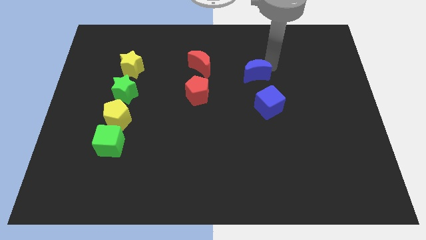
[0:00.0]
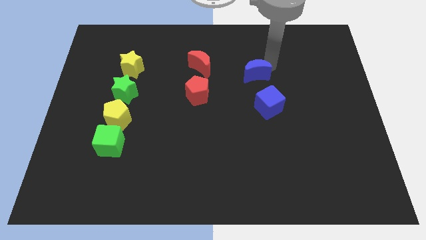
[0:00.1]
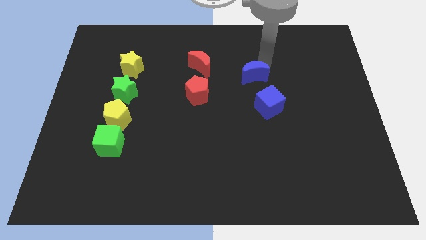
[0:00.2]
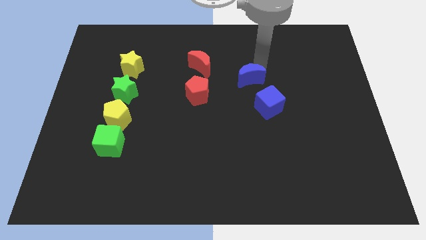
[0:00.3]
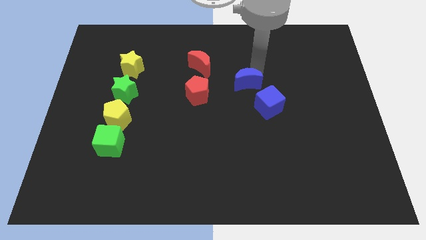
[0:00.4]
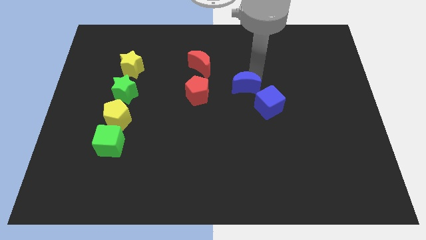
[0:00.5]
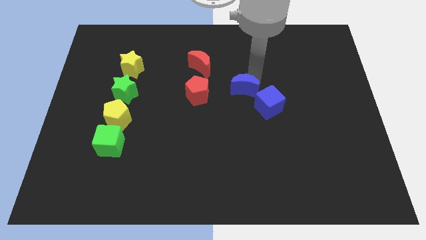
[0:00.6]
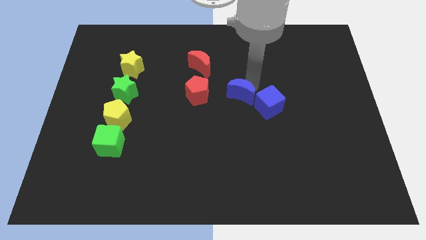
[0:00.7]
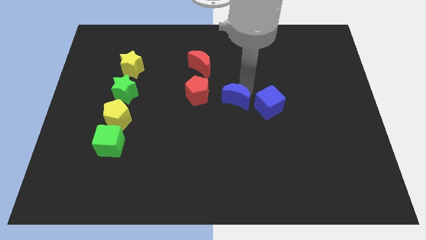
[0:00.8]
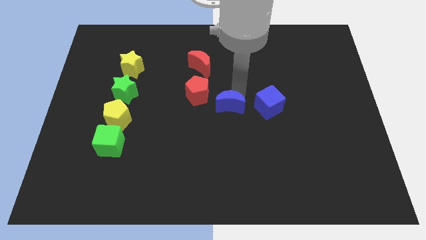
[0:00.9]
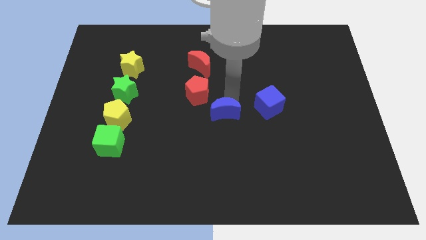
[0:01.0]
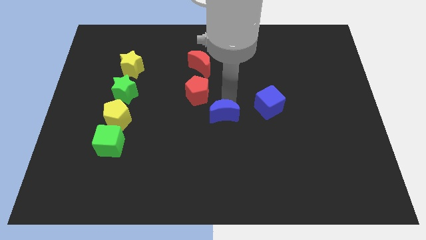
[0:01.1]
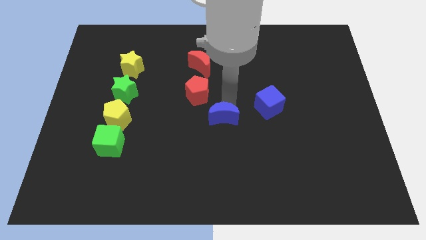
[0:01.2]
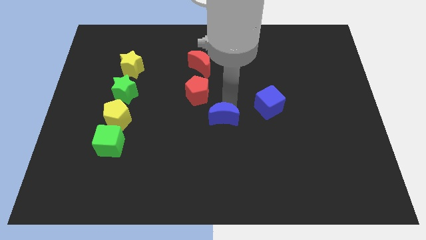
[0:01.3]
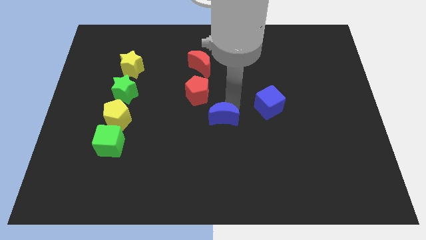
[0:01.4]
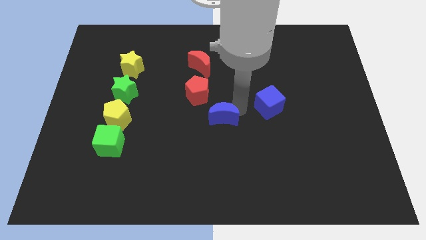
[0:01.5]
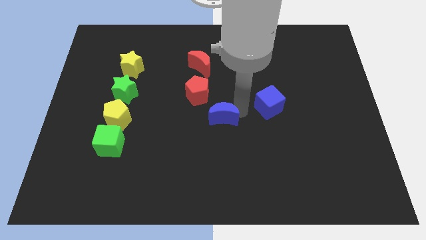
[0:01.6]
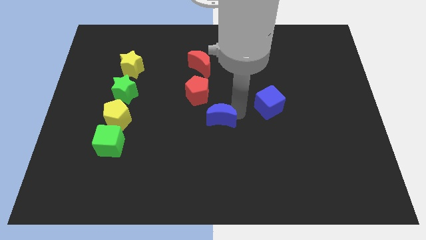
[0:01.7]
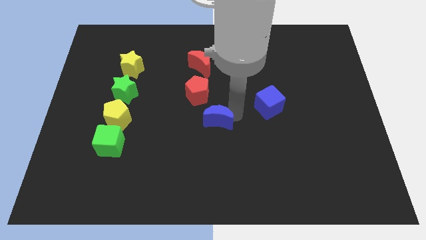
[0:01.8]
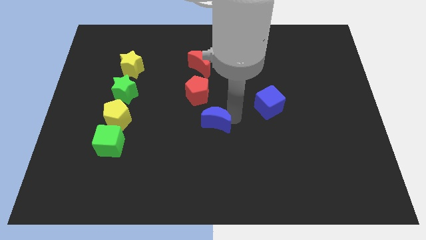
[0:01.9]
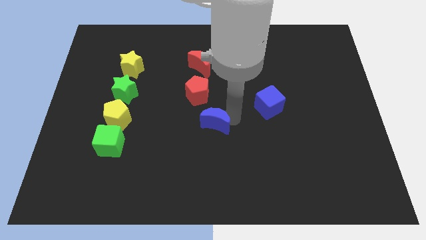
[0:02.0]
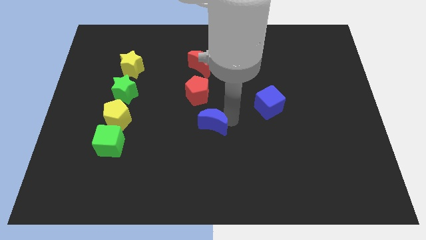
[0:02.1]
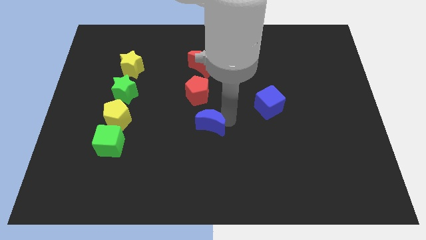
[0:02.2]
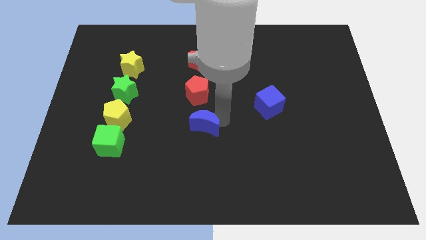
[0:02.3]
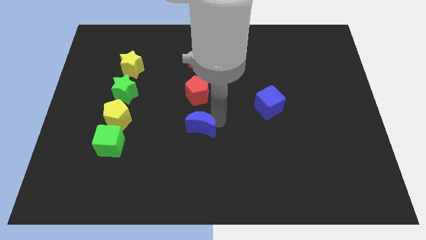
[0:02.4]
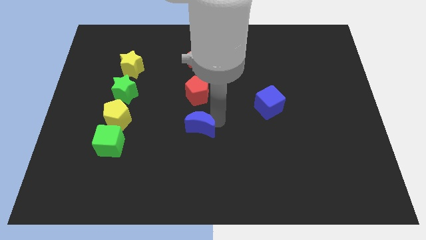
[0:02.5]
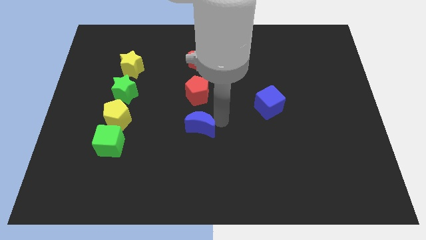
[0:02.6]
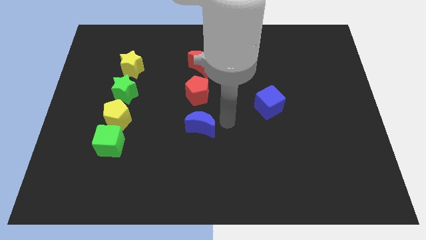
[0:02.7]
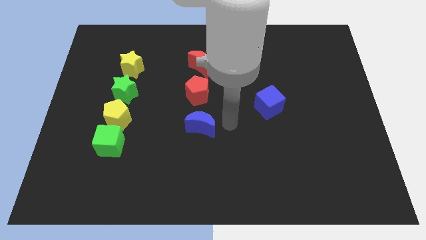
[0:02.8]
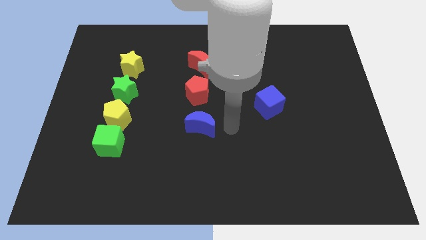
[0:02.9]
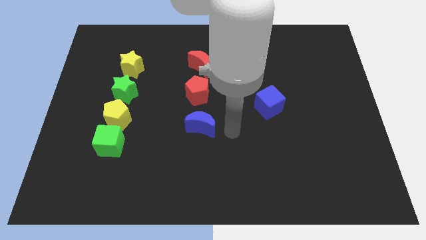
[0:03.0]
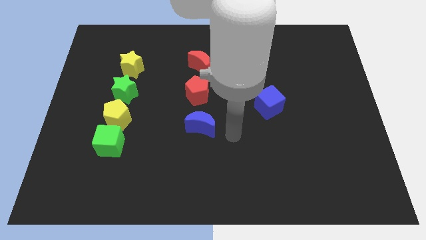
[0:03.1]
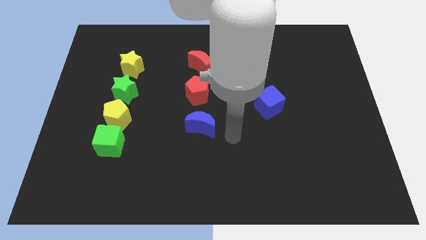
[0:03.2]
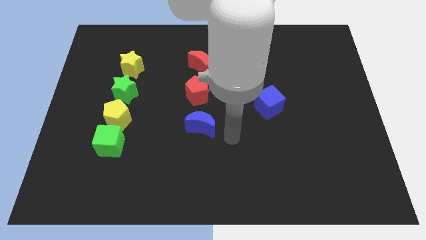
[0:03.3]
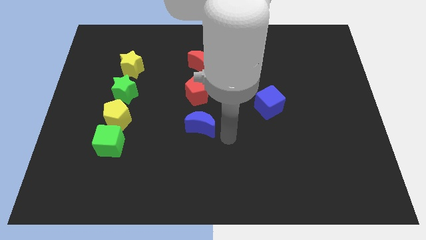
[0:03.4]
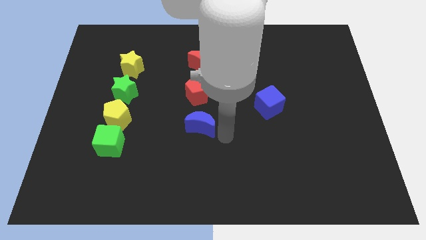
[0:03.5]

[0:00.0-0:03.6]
put the blue crescent vertically below the red pentagon

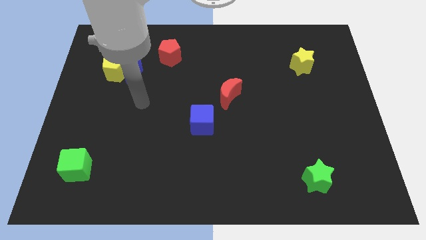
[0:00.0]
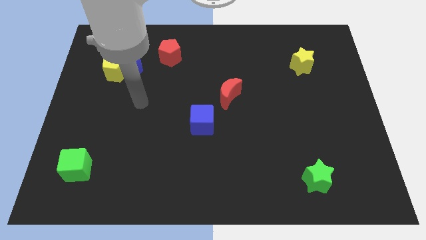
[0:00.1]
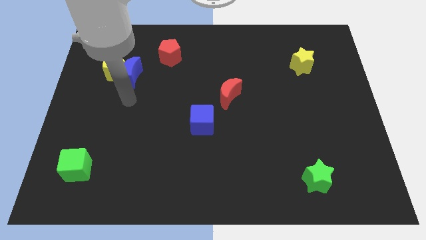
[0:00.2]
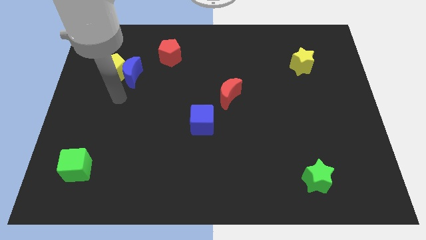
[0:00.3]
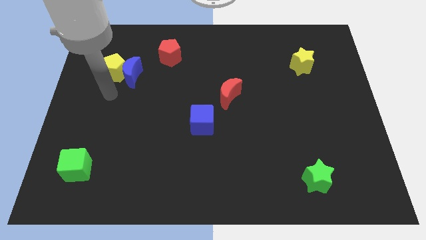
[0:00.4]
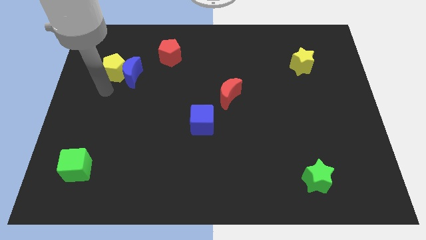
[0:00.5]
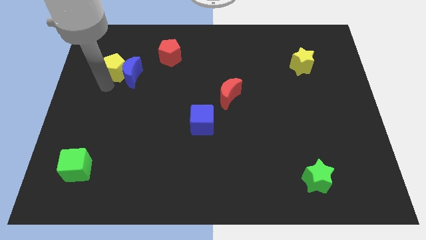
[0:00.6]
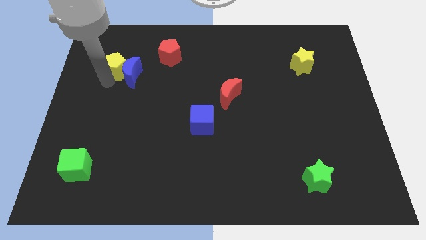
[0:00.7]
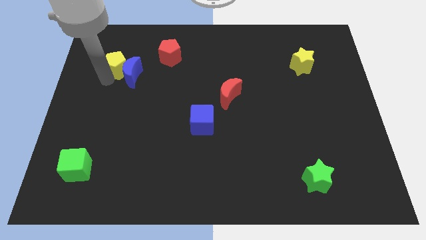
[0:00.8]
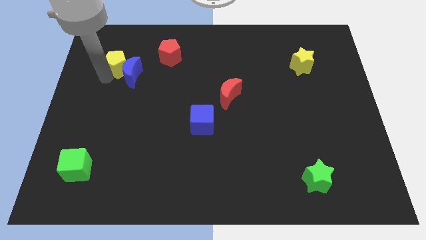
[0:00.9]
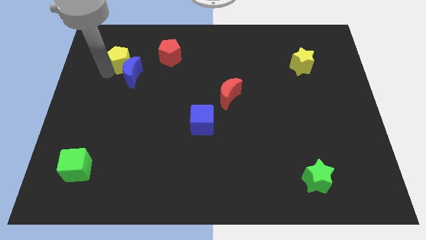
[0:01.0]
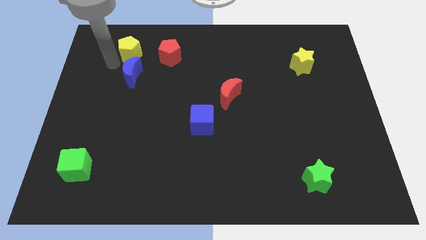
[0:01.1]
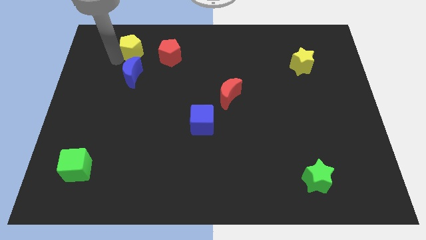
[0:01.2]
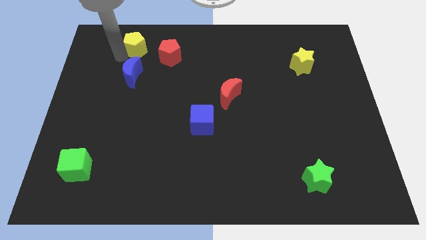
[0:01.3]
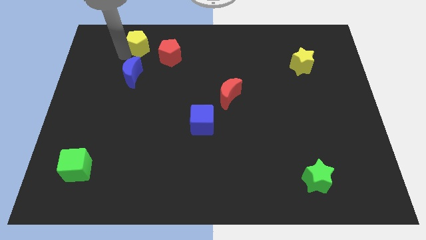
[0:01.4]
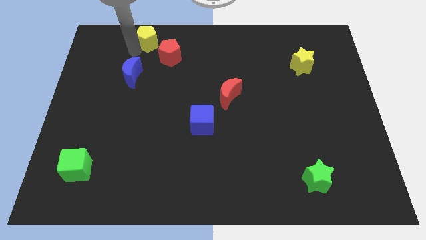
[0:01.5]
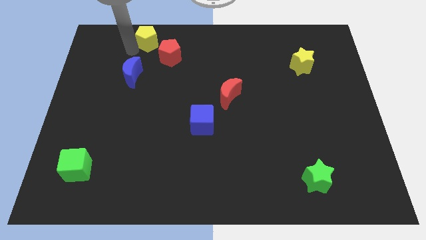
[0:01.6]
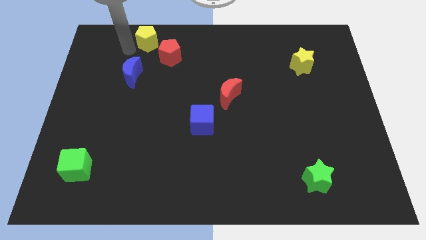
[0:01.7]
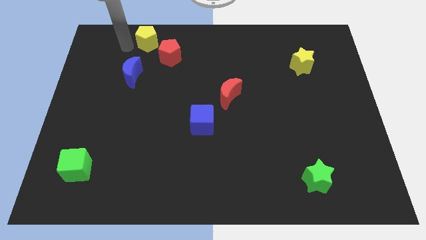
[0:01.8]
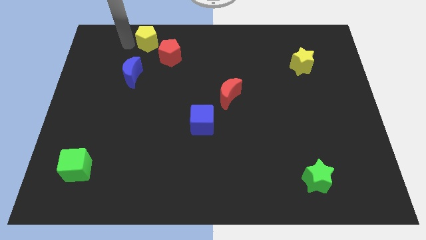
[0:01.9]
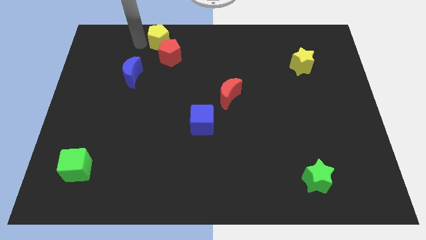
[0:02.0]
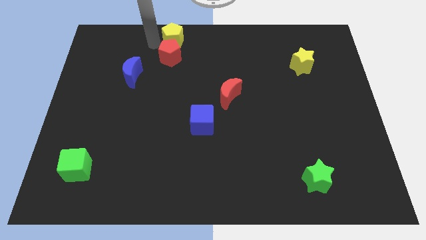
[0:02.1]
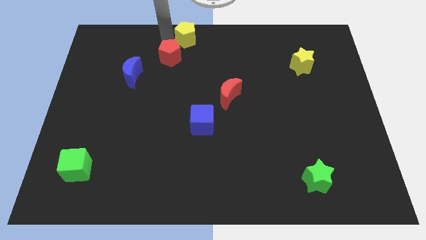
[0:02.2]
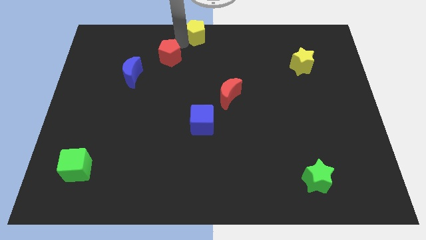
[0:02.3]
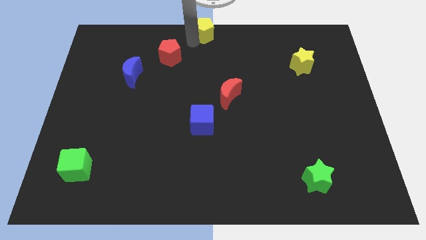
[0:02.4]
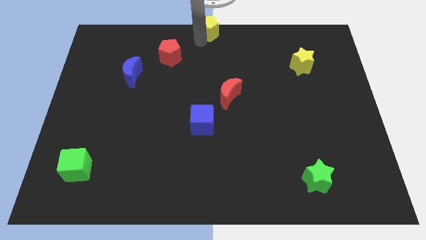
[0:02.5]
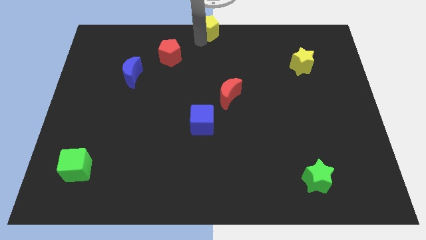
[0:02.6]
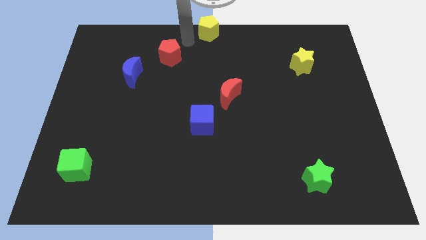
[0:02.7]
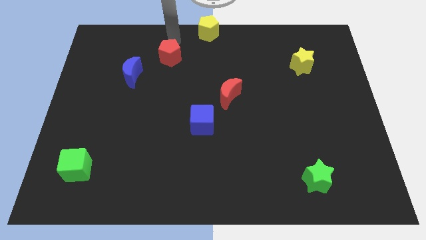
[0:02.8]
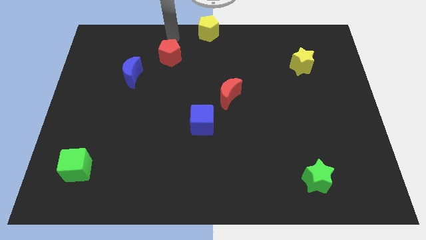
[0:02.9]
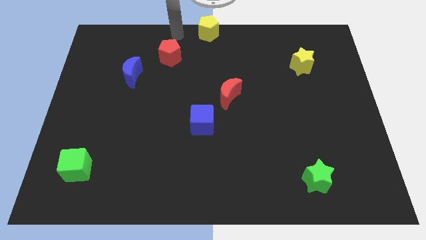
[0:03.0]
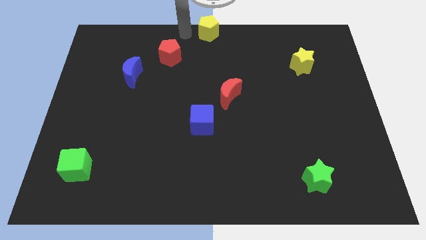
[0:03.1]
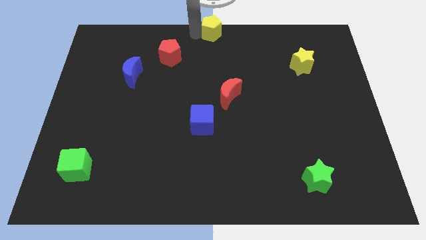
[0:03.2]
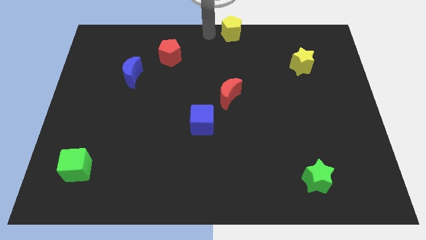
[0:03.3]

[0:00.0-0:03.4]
place the yellow pentagon on the top centre of the board

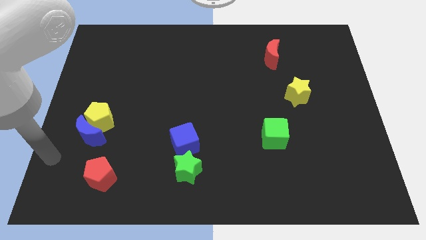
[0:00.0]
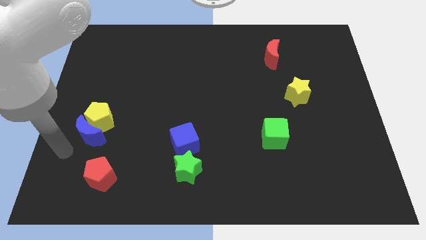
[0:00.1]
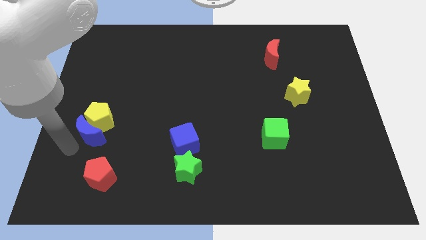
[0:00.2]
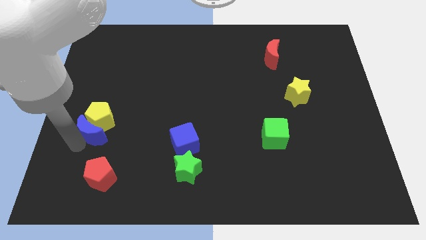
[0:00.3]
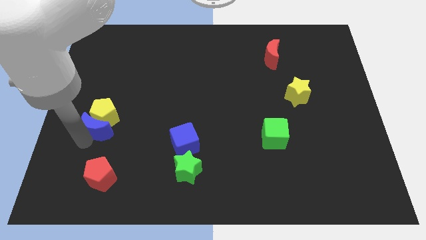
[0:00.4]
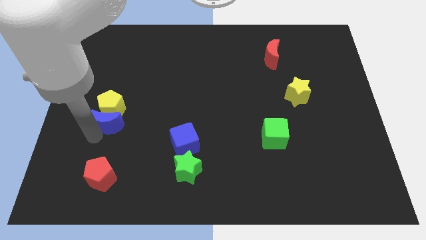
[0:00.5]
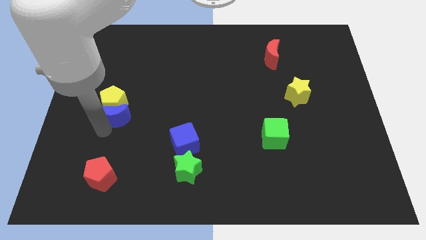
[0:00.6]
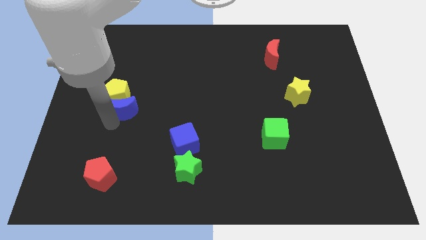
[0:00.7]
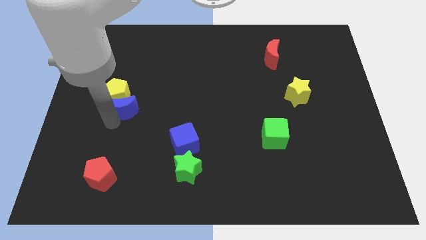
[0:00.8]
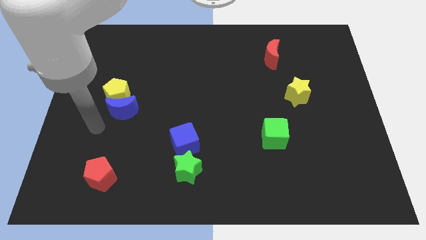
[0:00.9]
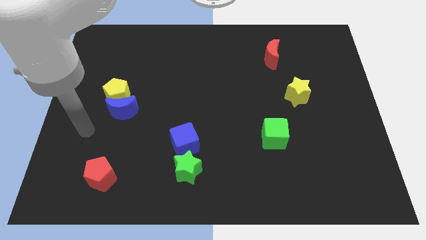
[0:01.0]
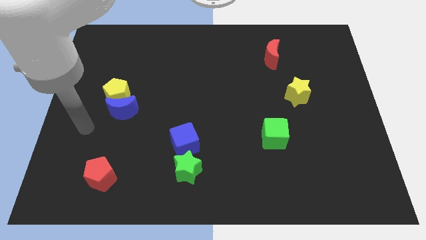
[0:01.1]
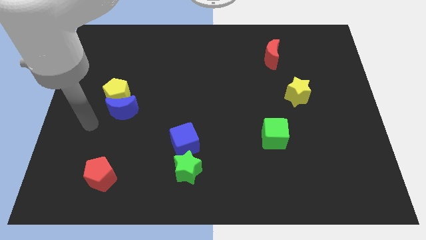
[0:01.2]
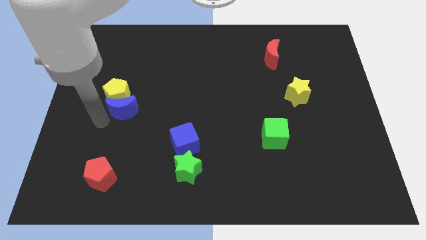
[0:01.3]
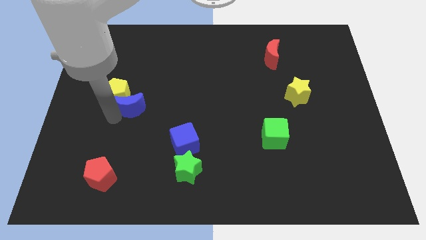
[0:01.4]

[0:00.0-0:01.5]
push the blue moon vertically below the yellow pentagon

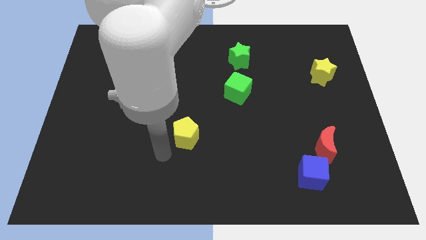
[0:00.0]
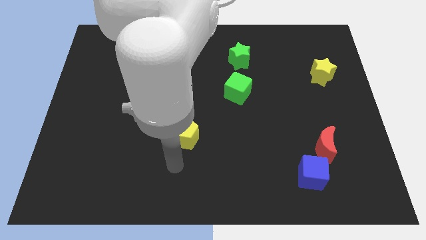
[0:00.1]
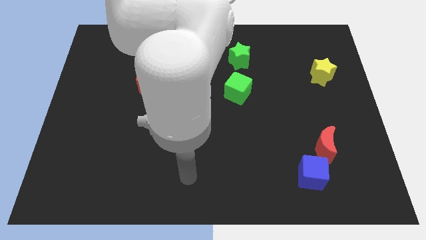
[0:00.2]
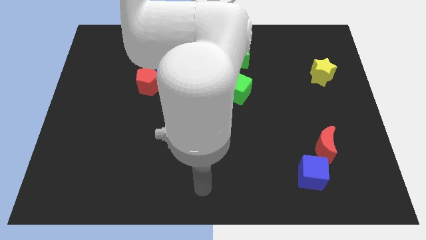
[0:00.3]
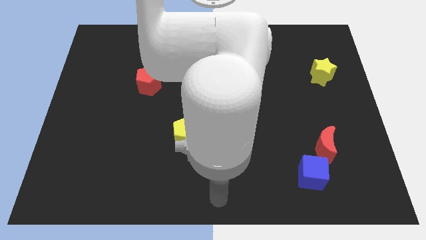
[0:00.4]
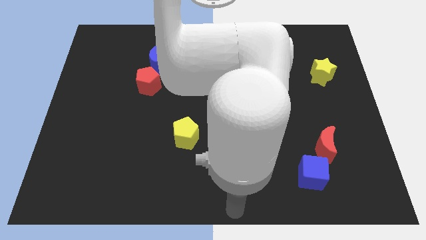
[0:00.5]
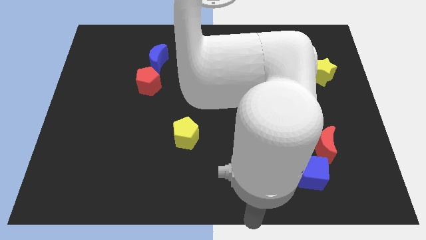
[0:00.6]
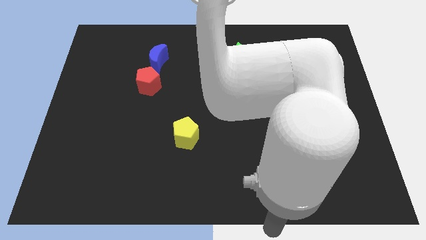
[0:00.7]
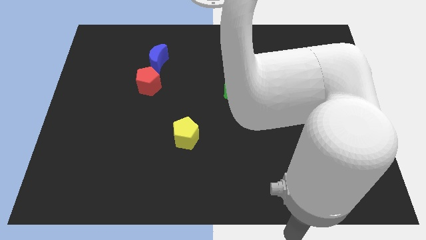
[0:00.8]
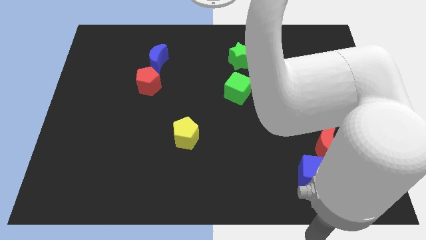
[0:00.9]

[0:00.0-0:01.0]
push the arm below the blue cube
